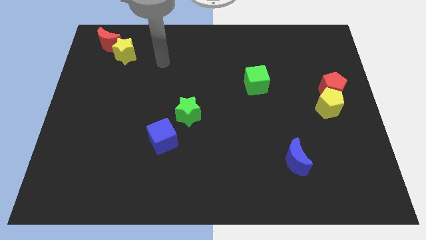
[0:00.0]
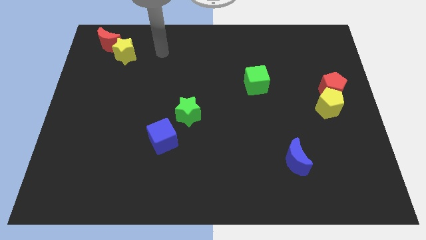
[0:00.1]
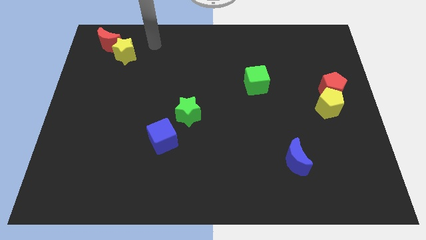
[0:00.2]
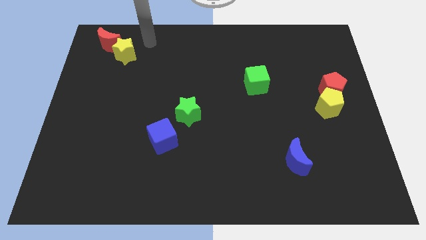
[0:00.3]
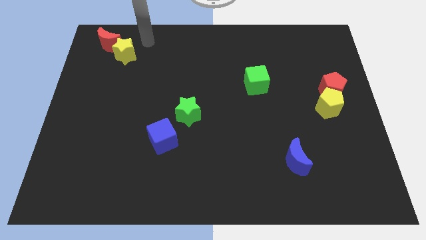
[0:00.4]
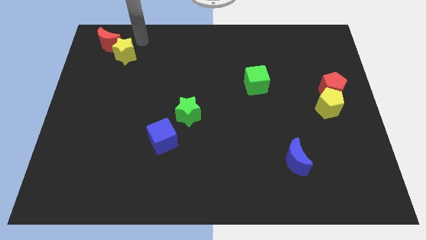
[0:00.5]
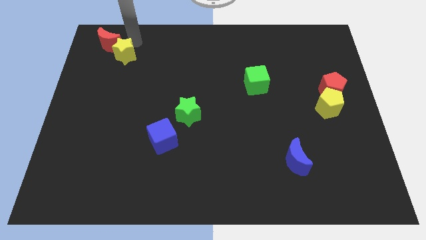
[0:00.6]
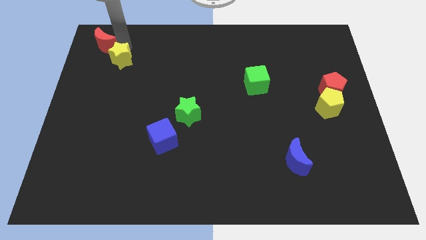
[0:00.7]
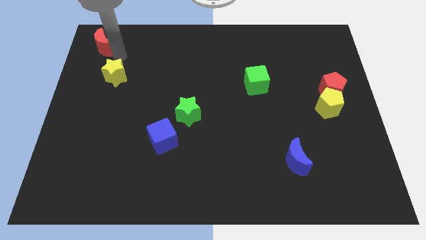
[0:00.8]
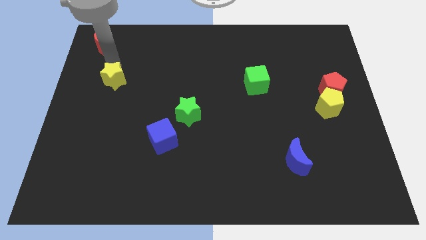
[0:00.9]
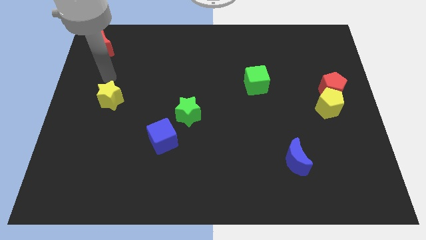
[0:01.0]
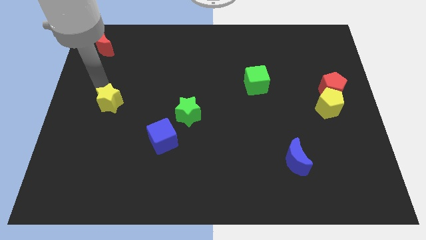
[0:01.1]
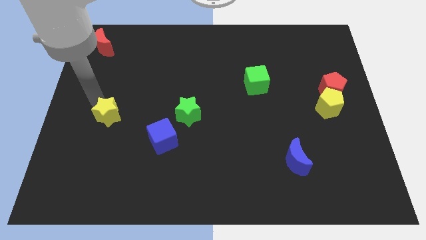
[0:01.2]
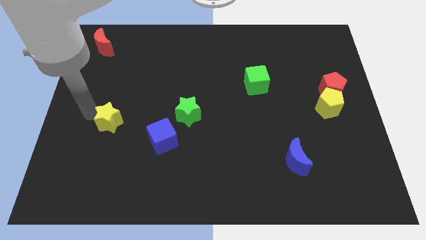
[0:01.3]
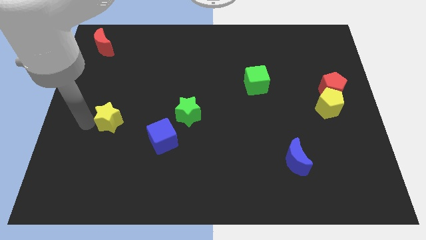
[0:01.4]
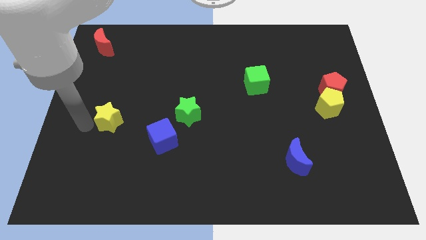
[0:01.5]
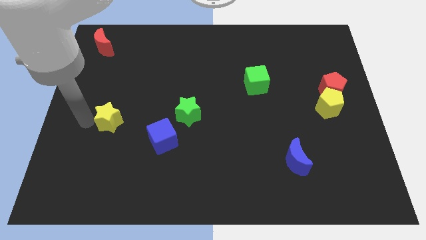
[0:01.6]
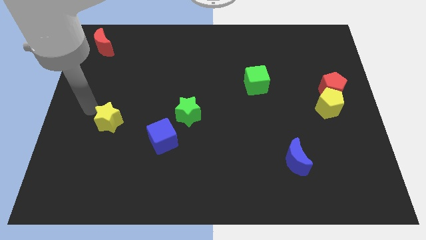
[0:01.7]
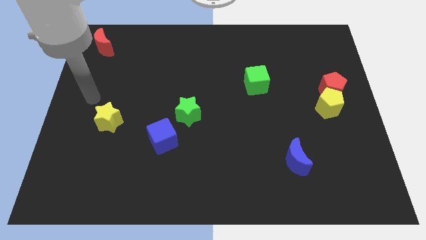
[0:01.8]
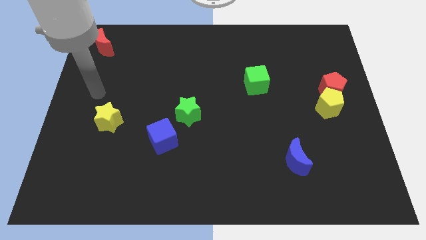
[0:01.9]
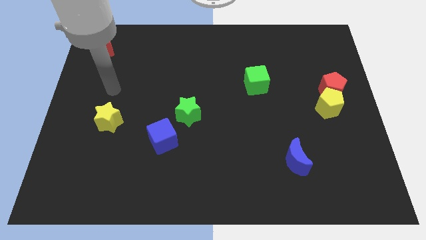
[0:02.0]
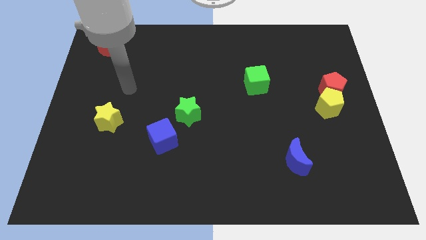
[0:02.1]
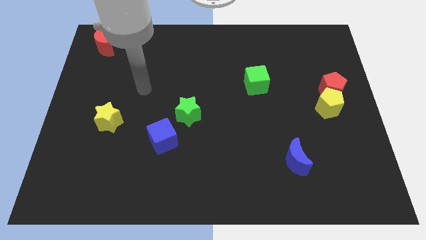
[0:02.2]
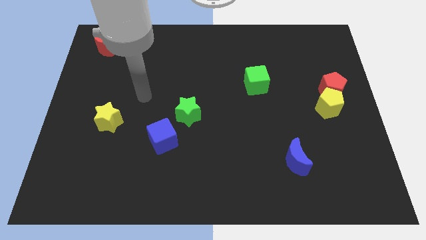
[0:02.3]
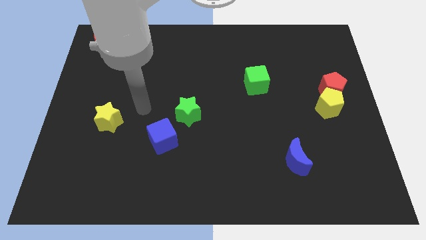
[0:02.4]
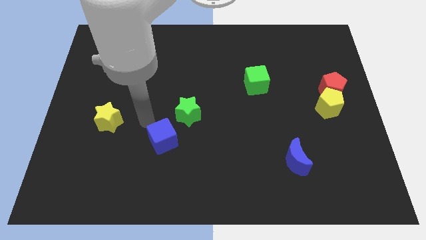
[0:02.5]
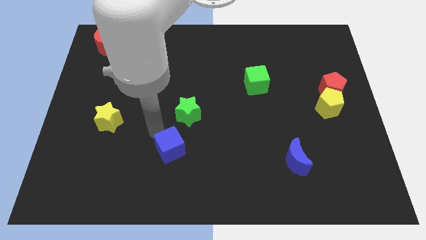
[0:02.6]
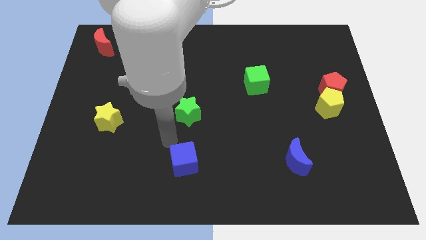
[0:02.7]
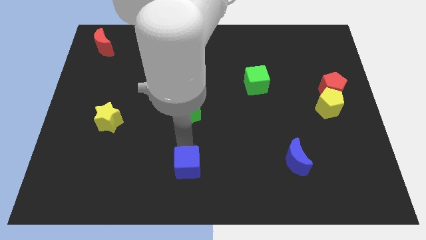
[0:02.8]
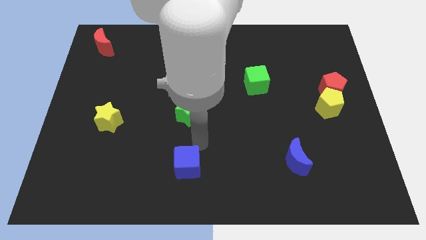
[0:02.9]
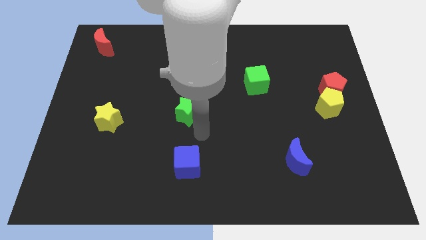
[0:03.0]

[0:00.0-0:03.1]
separate the yellow star from the red crescent

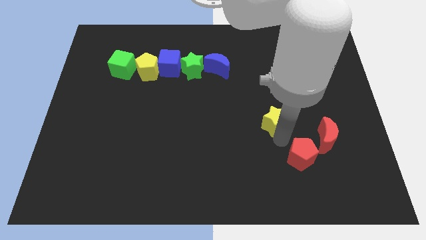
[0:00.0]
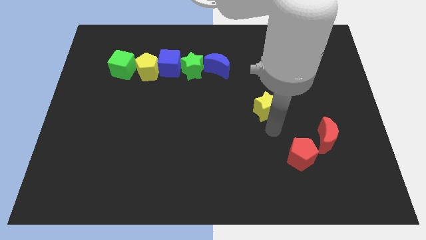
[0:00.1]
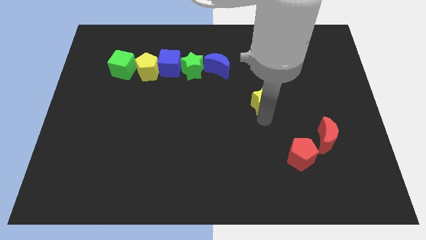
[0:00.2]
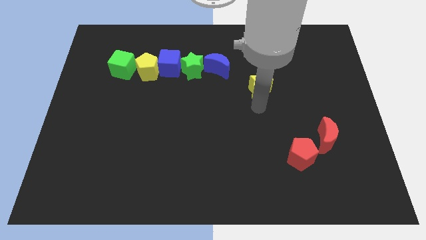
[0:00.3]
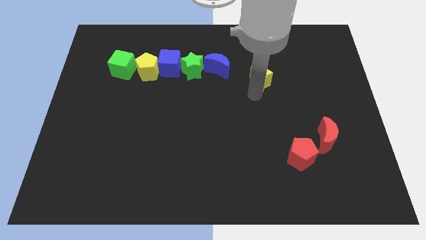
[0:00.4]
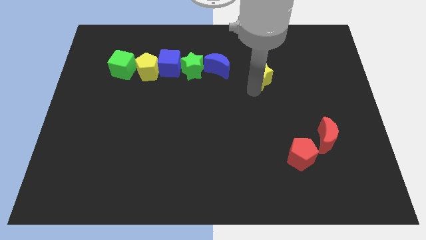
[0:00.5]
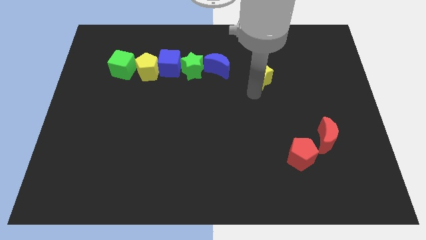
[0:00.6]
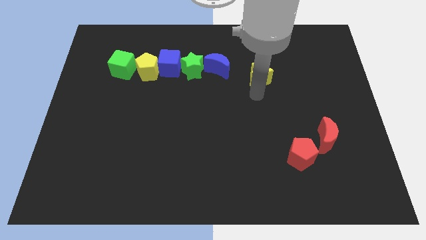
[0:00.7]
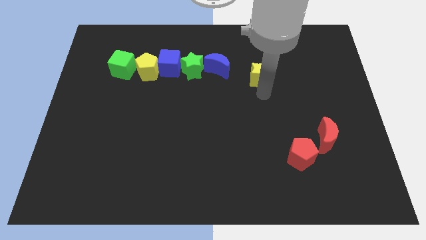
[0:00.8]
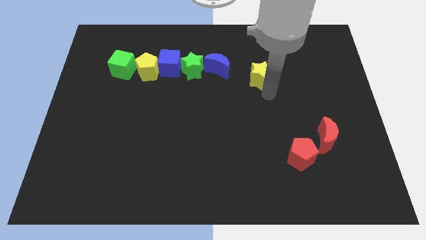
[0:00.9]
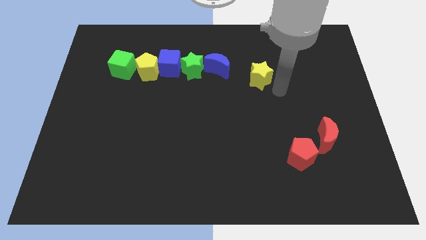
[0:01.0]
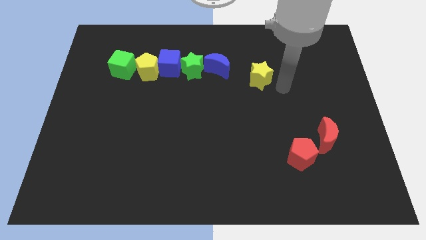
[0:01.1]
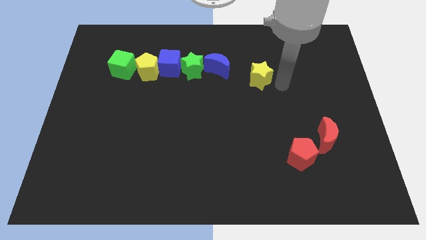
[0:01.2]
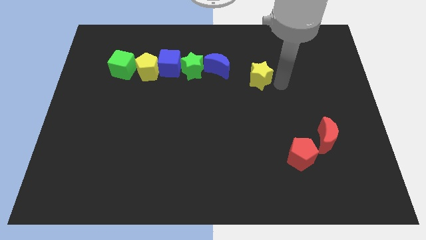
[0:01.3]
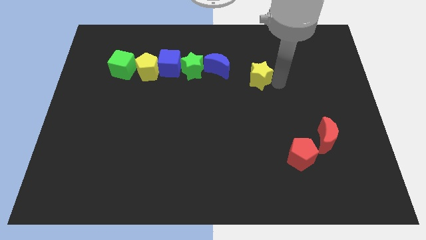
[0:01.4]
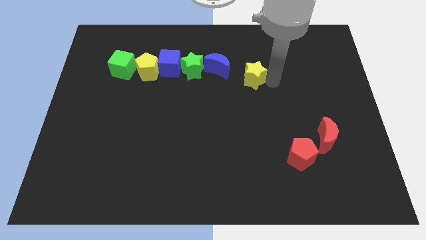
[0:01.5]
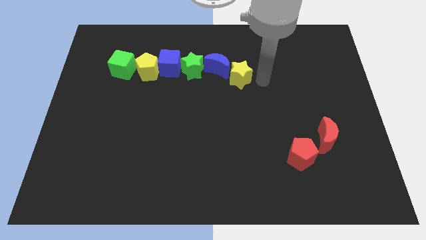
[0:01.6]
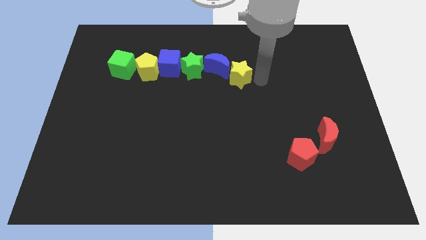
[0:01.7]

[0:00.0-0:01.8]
move the yellow star left to the blue moon

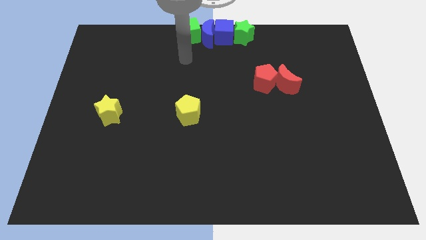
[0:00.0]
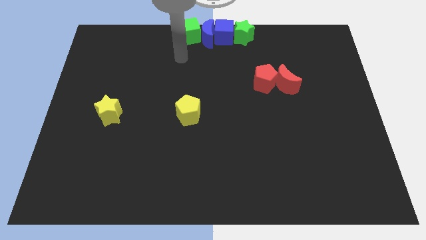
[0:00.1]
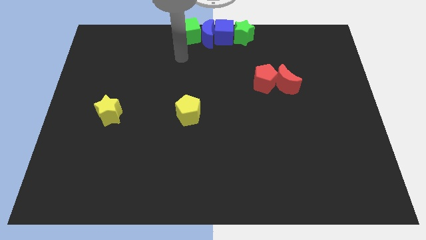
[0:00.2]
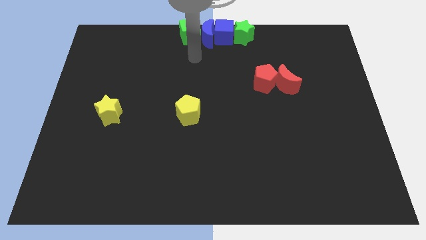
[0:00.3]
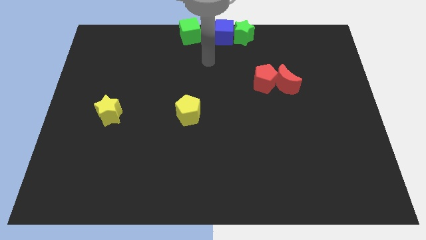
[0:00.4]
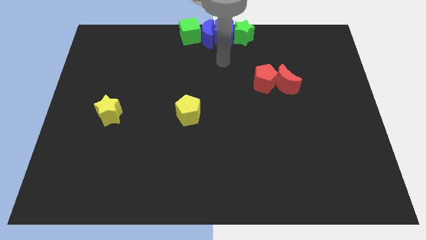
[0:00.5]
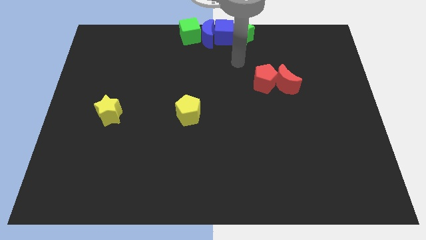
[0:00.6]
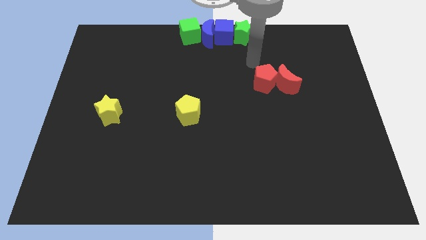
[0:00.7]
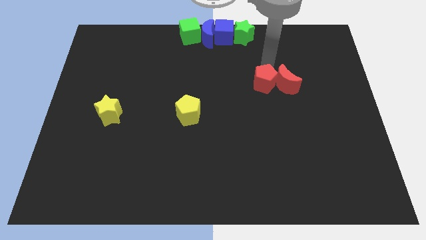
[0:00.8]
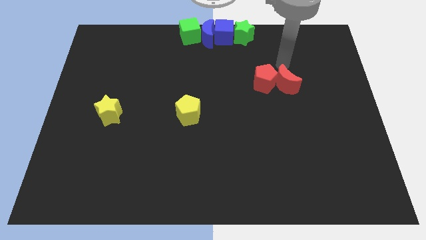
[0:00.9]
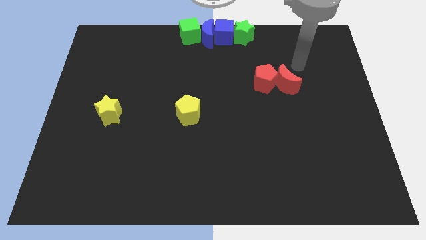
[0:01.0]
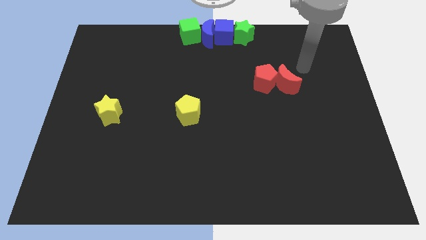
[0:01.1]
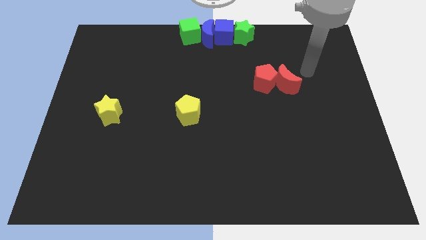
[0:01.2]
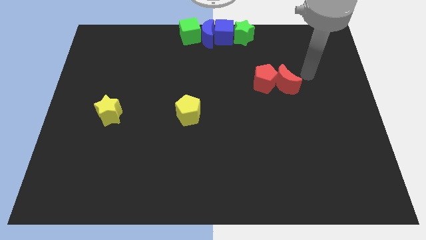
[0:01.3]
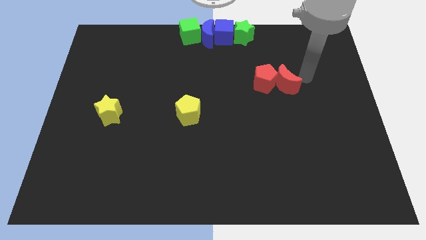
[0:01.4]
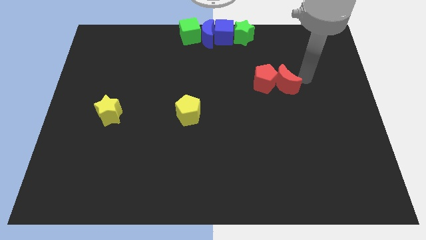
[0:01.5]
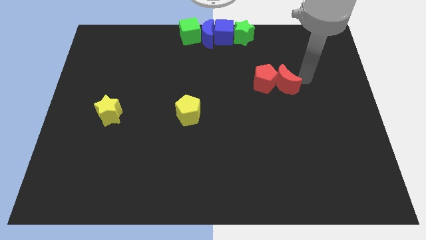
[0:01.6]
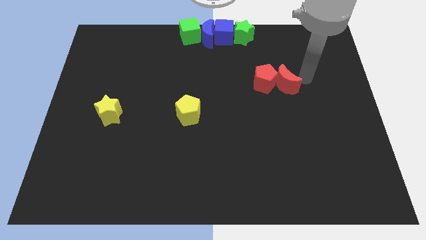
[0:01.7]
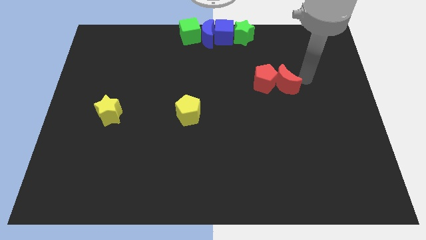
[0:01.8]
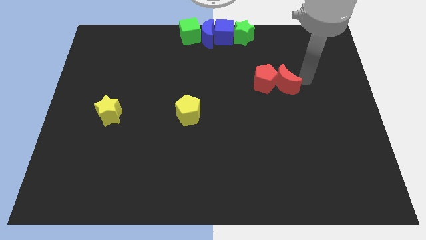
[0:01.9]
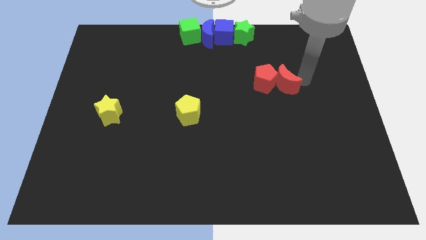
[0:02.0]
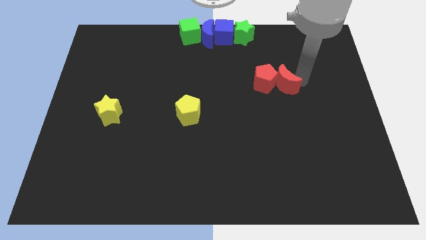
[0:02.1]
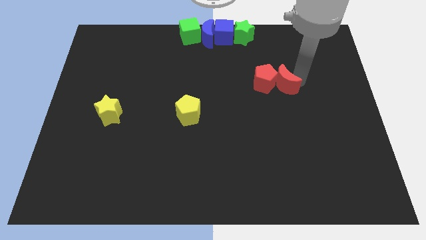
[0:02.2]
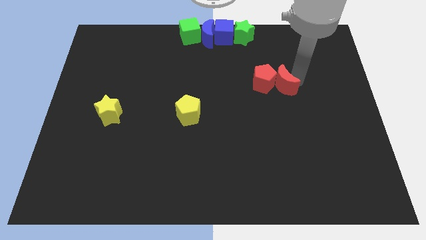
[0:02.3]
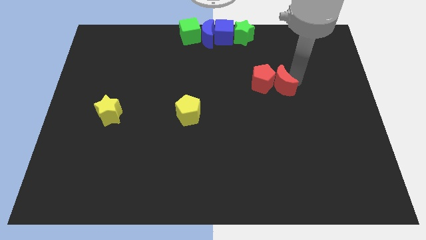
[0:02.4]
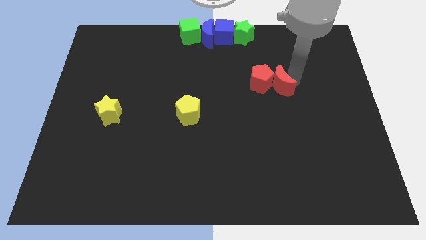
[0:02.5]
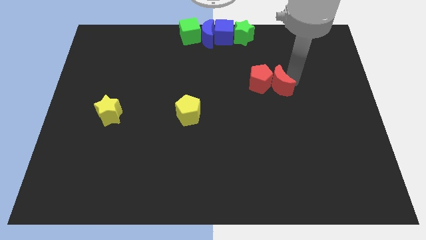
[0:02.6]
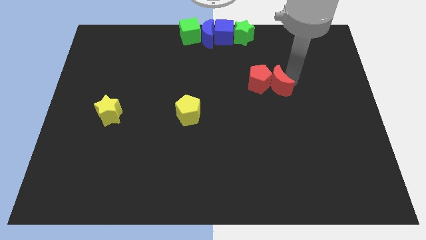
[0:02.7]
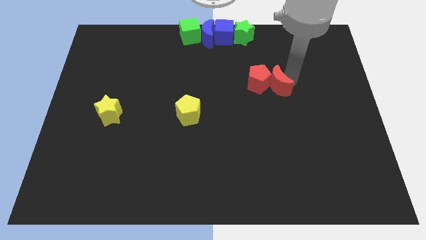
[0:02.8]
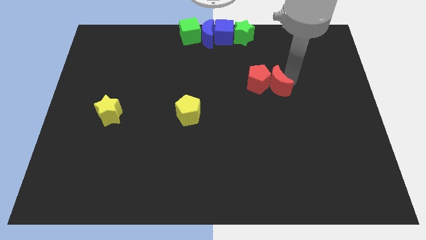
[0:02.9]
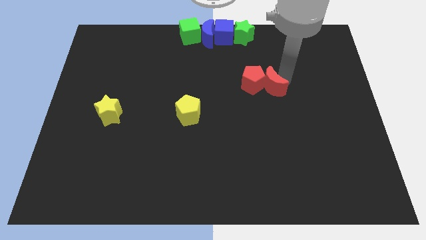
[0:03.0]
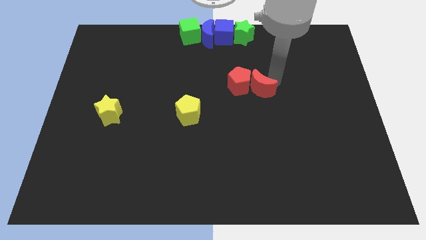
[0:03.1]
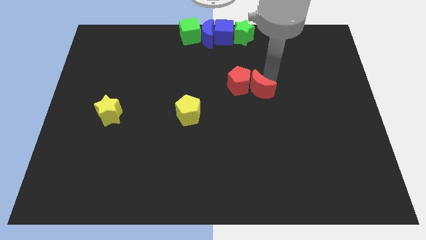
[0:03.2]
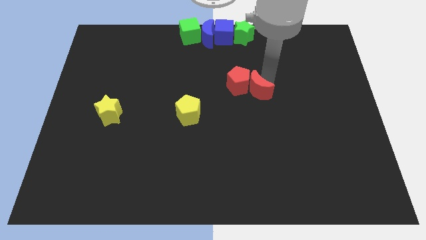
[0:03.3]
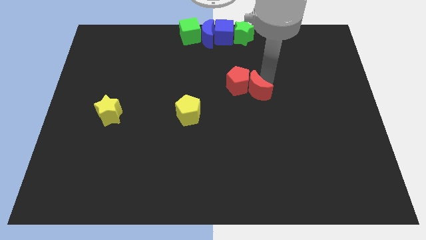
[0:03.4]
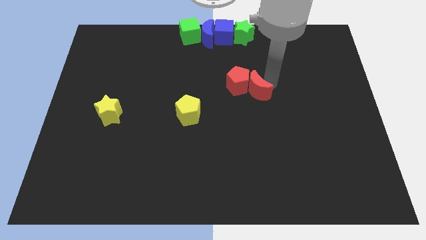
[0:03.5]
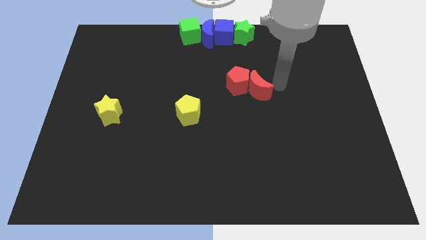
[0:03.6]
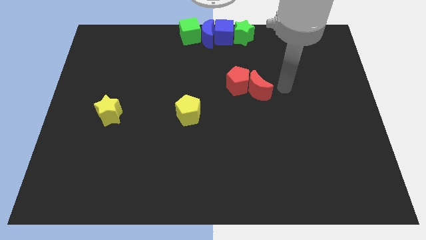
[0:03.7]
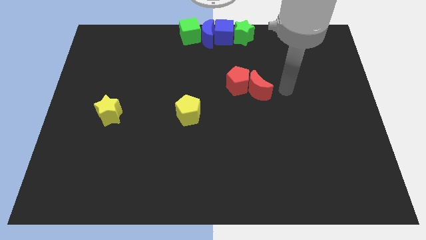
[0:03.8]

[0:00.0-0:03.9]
push the red blocks towards the center of the board
